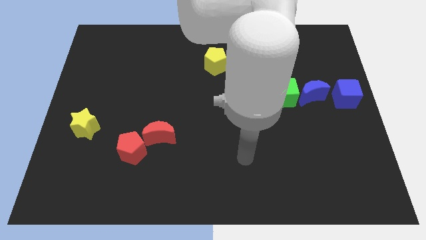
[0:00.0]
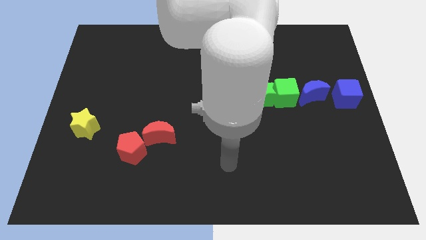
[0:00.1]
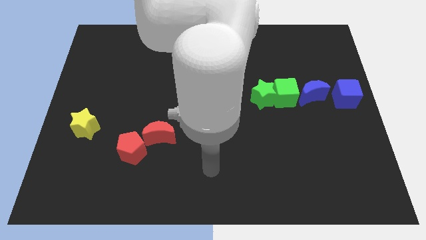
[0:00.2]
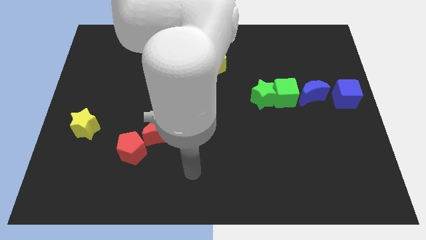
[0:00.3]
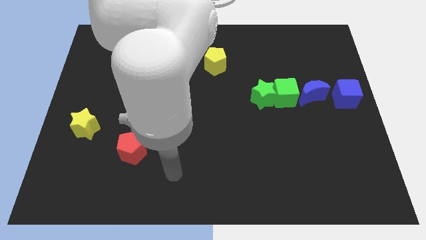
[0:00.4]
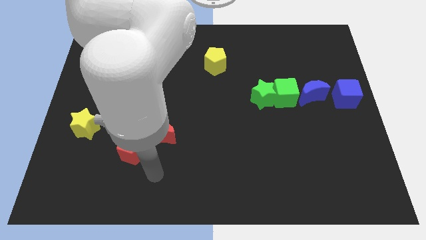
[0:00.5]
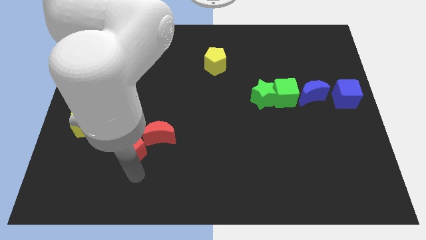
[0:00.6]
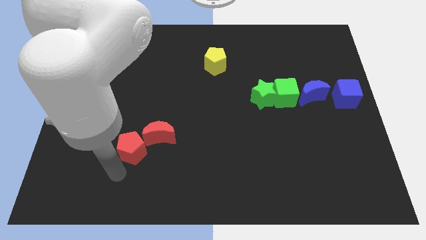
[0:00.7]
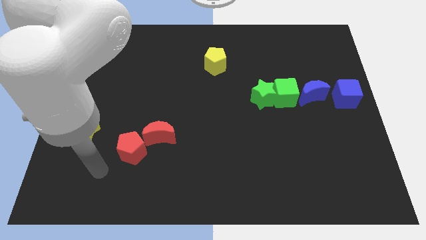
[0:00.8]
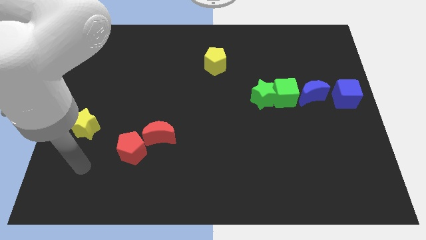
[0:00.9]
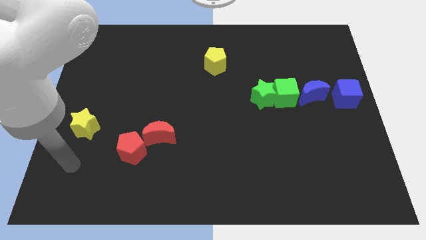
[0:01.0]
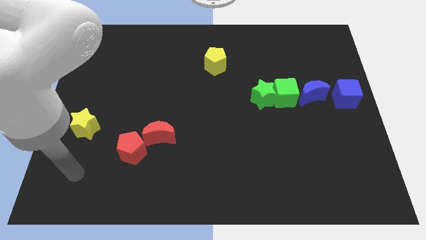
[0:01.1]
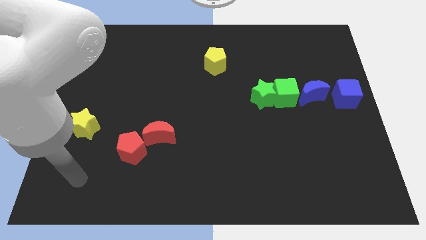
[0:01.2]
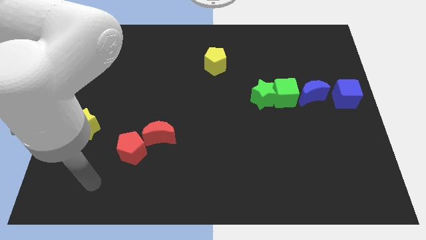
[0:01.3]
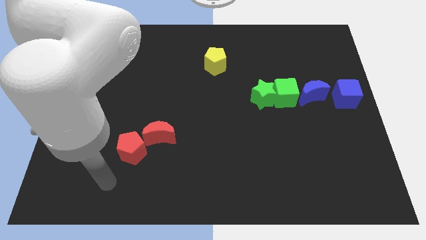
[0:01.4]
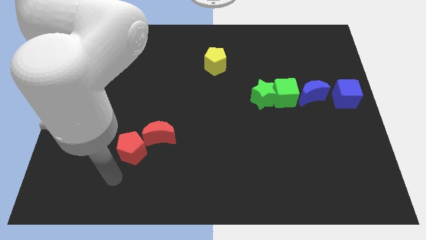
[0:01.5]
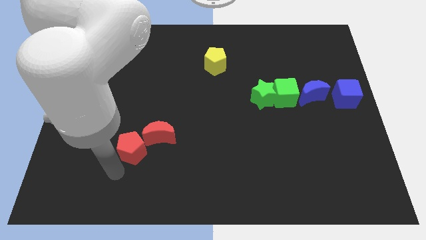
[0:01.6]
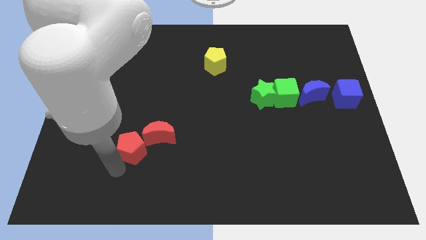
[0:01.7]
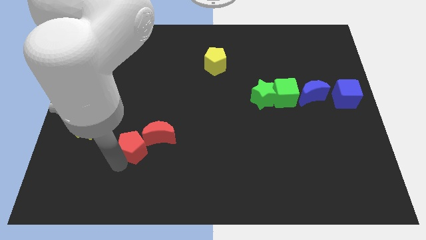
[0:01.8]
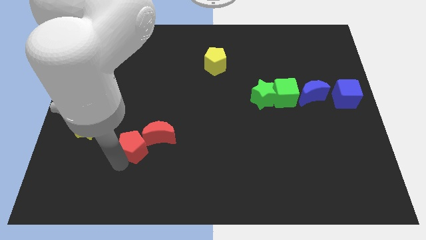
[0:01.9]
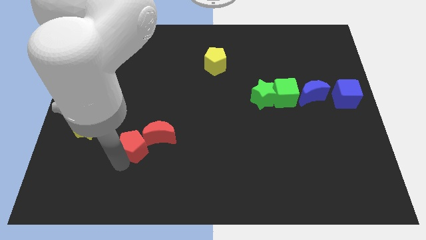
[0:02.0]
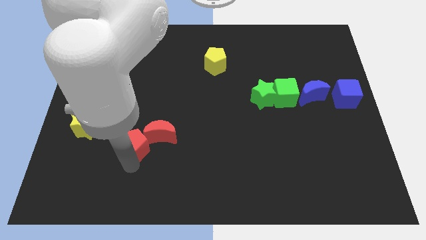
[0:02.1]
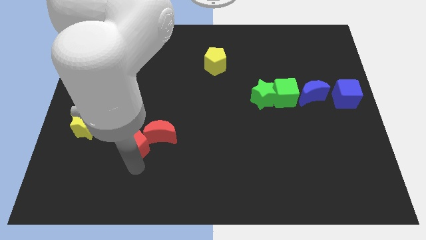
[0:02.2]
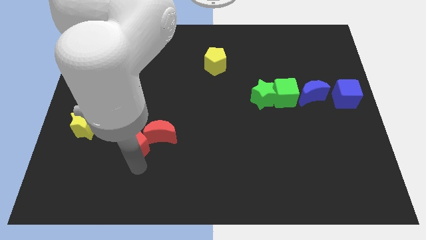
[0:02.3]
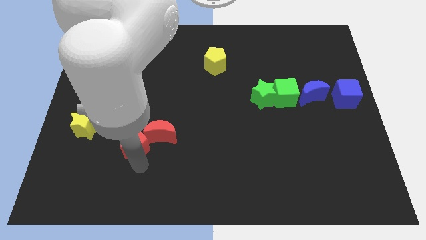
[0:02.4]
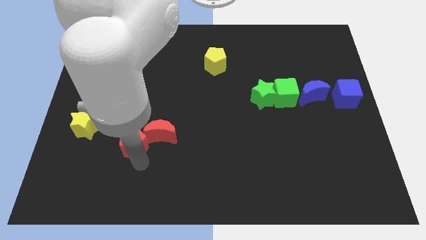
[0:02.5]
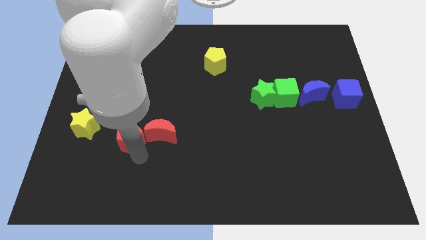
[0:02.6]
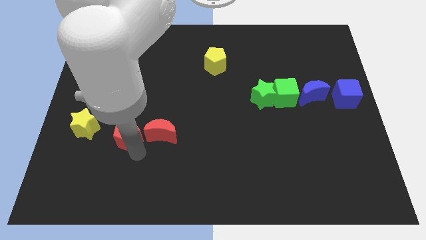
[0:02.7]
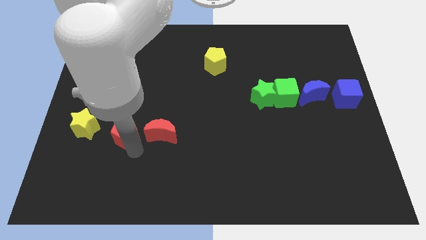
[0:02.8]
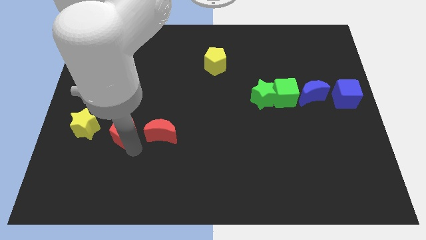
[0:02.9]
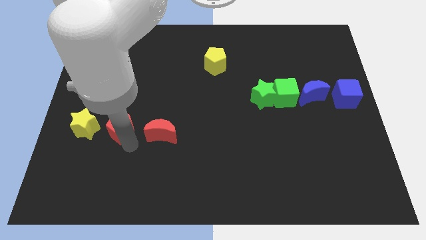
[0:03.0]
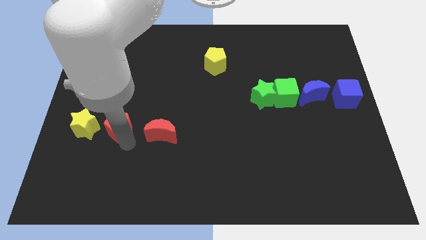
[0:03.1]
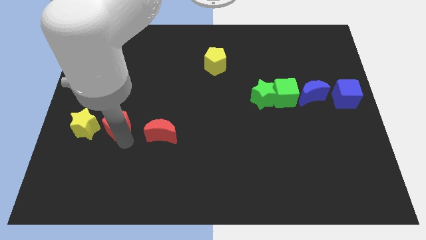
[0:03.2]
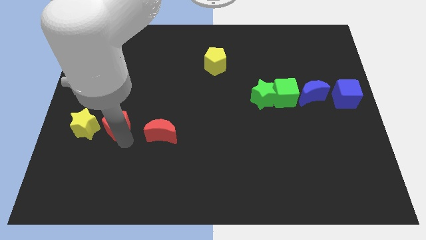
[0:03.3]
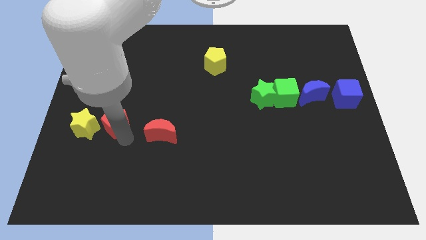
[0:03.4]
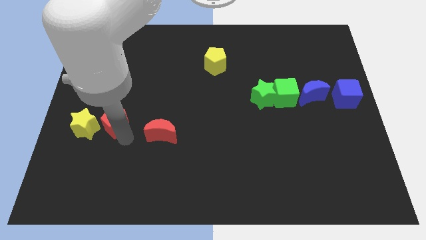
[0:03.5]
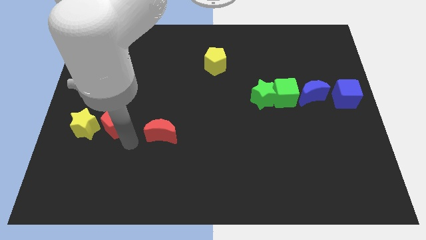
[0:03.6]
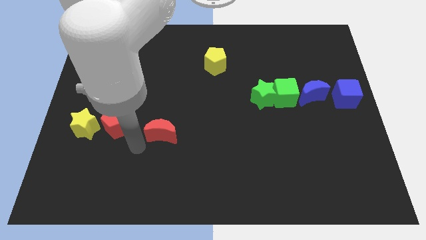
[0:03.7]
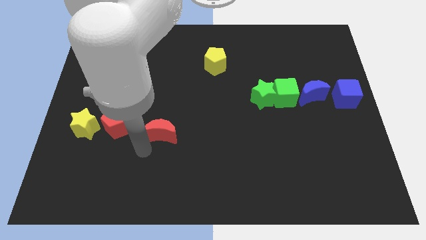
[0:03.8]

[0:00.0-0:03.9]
move red pentagon right the yellow star

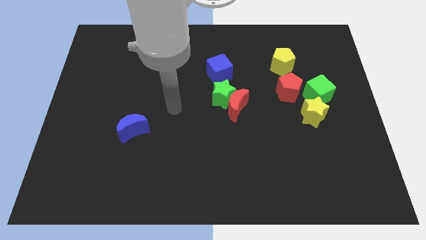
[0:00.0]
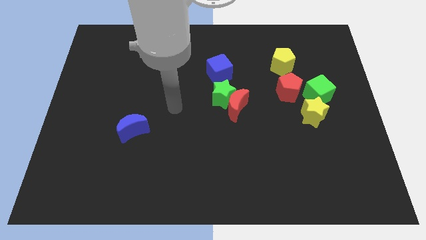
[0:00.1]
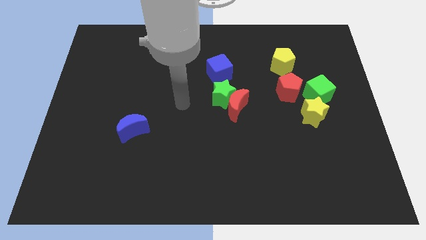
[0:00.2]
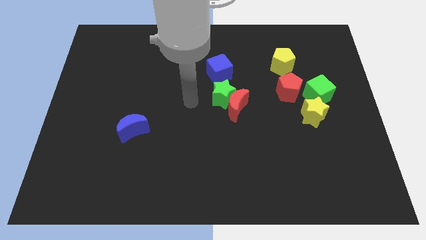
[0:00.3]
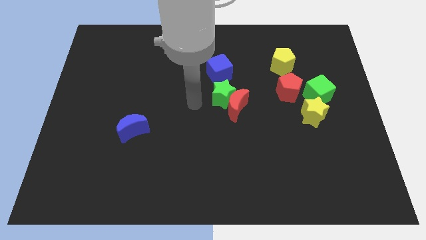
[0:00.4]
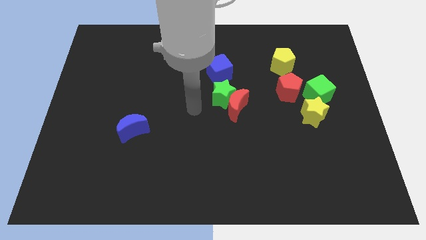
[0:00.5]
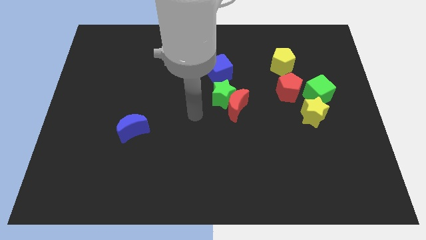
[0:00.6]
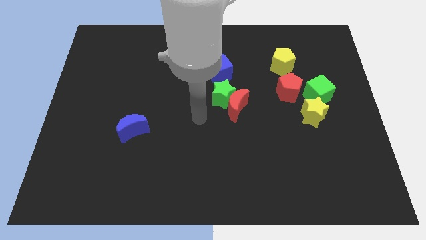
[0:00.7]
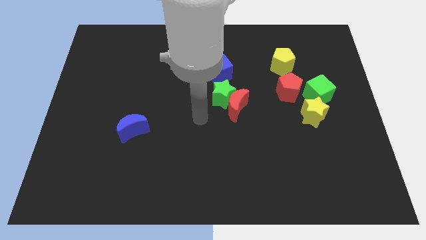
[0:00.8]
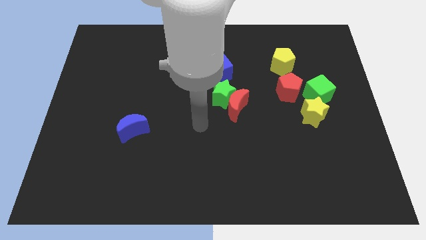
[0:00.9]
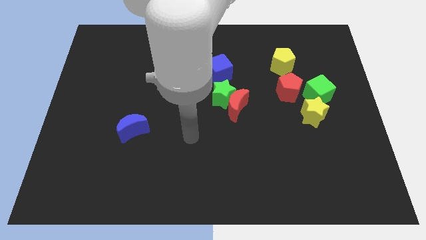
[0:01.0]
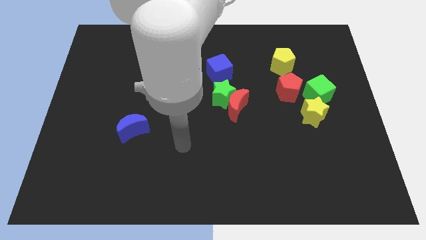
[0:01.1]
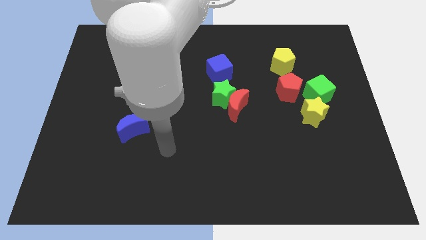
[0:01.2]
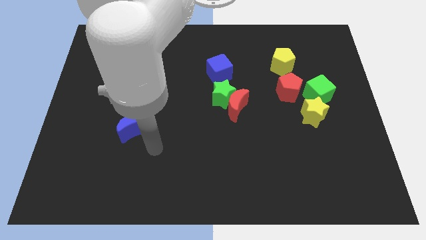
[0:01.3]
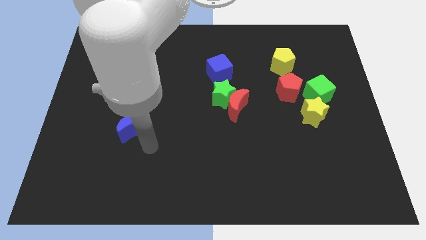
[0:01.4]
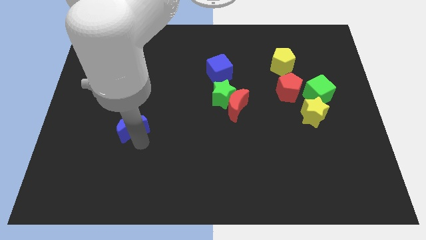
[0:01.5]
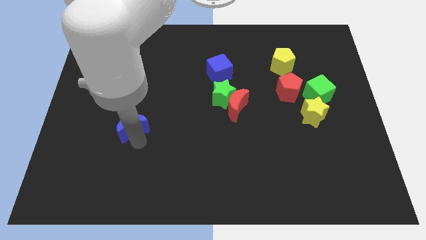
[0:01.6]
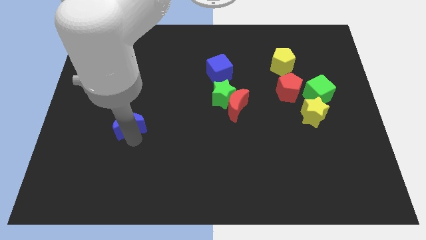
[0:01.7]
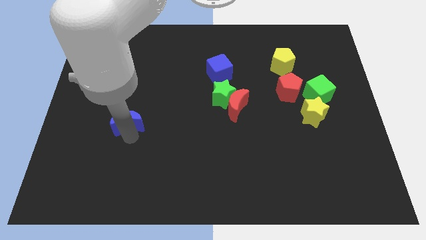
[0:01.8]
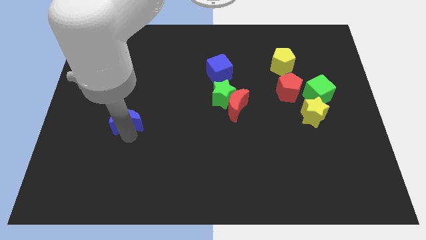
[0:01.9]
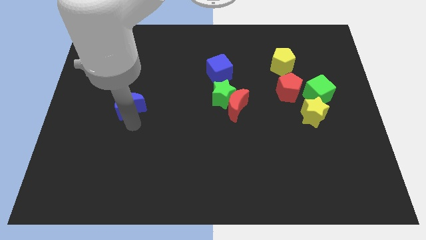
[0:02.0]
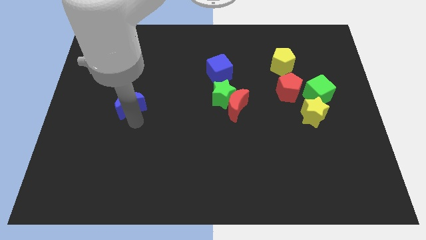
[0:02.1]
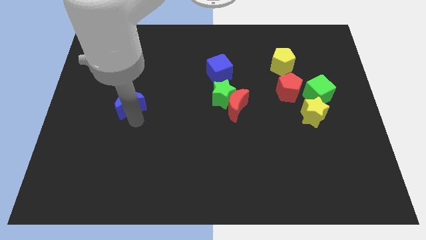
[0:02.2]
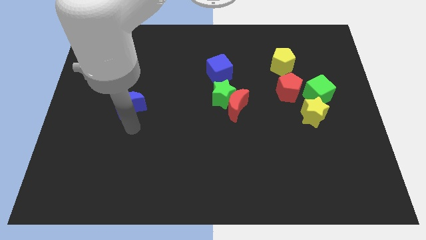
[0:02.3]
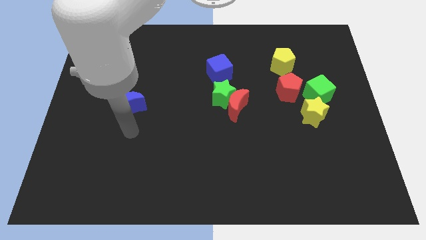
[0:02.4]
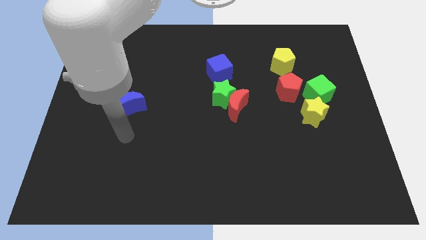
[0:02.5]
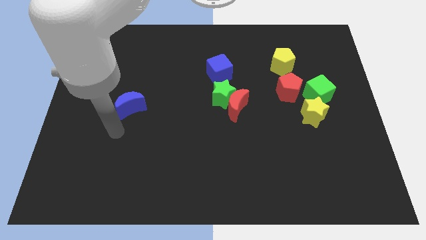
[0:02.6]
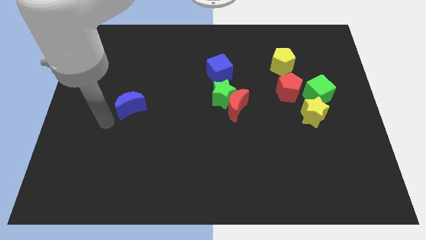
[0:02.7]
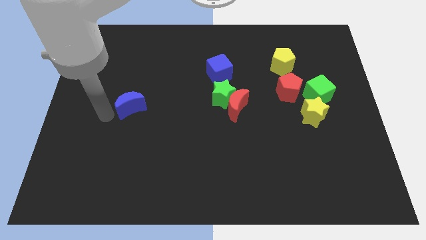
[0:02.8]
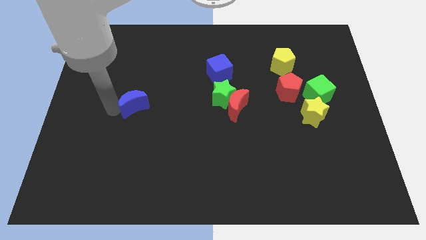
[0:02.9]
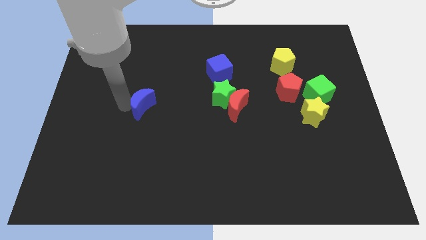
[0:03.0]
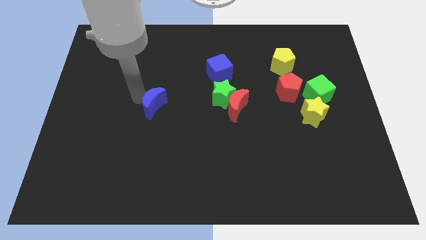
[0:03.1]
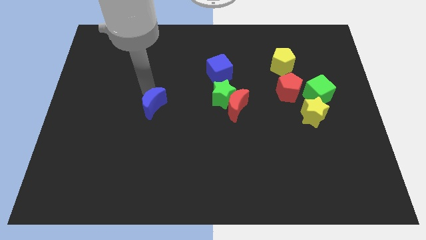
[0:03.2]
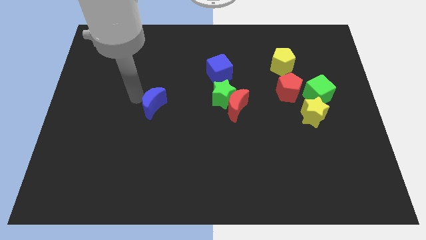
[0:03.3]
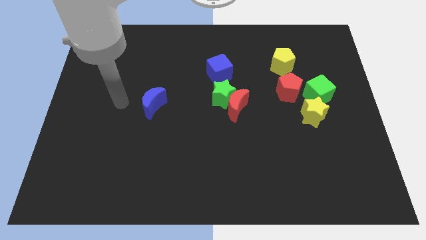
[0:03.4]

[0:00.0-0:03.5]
place the blue crescent horizontally to the left side of the red crescent

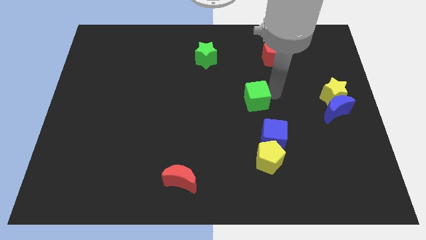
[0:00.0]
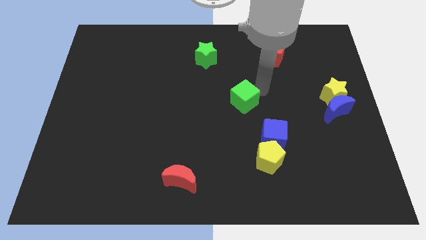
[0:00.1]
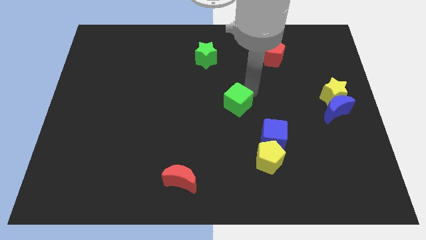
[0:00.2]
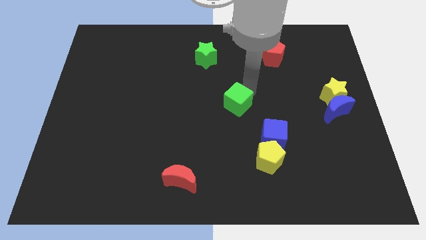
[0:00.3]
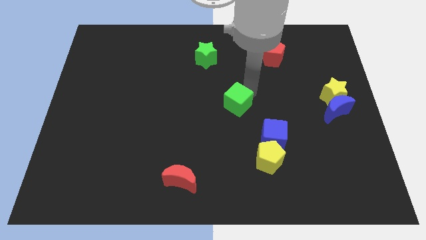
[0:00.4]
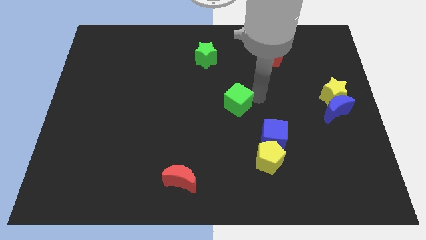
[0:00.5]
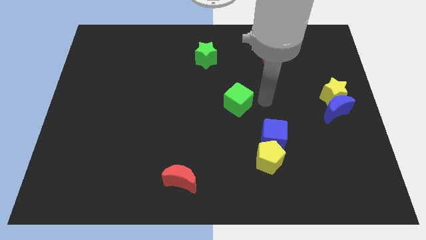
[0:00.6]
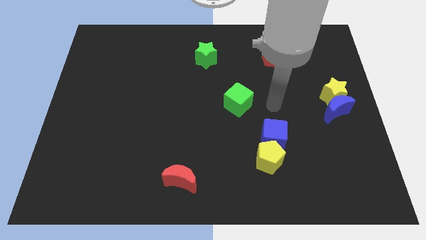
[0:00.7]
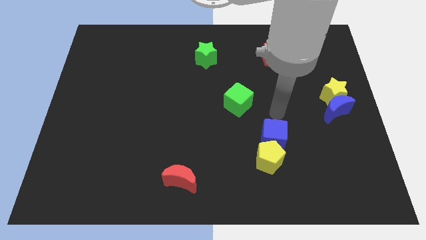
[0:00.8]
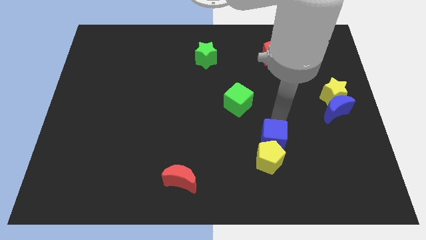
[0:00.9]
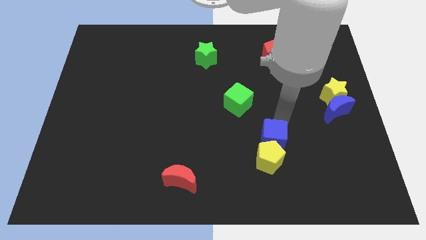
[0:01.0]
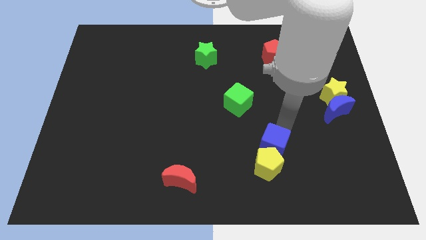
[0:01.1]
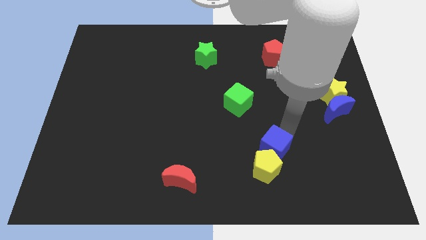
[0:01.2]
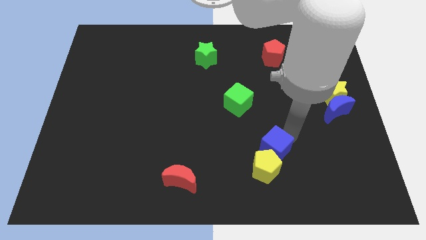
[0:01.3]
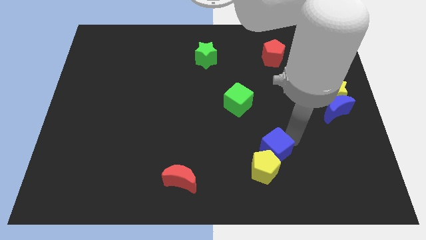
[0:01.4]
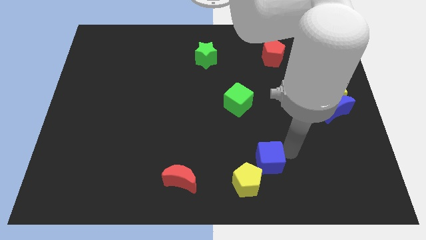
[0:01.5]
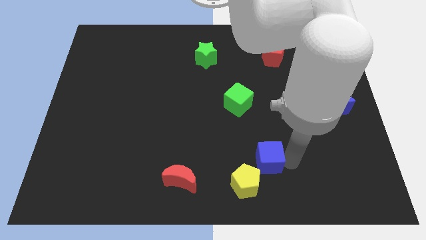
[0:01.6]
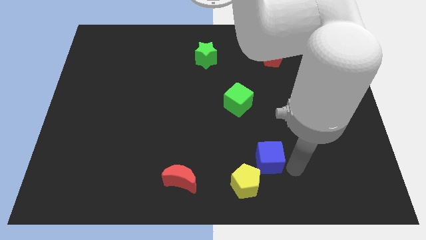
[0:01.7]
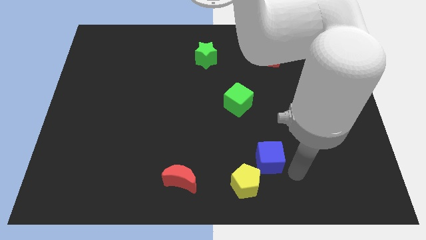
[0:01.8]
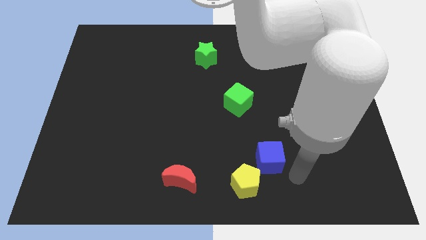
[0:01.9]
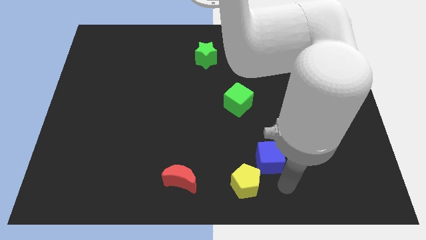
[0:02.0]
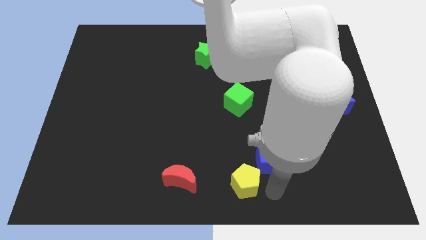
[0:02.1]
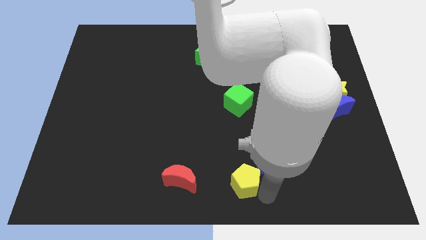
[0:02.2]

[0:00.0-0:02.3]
push the green cube to the center and blue cube and yellow pentagon towards bottom
